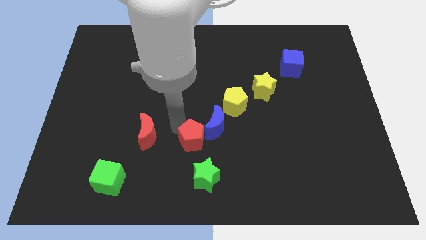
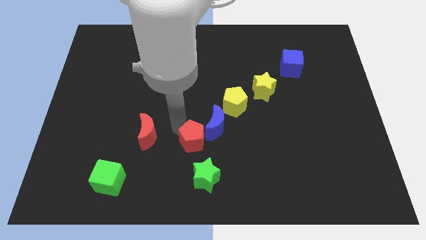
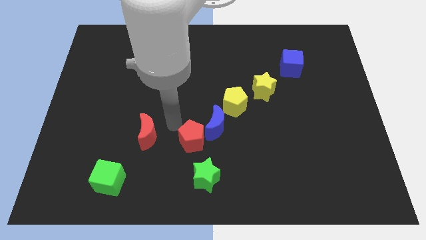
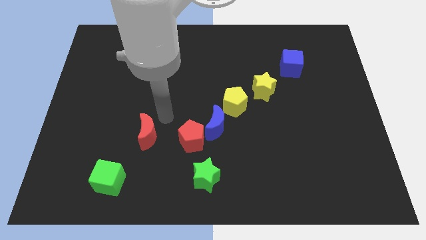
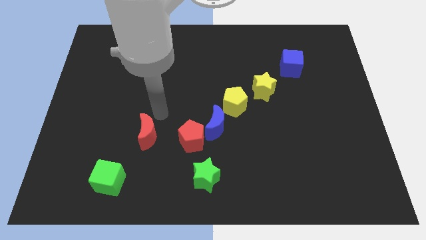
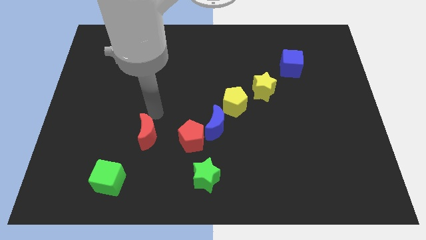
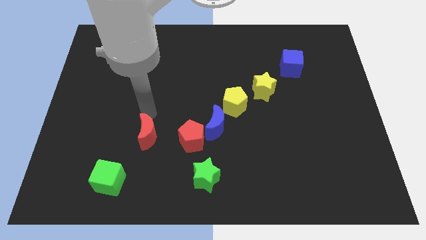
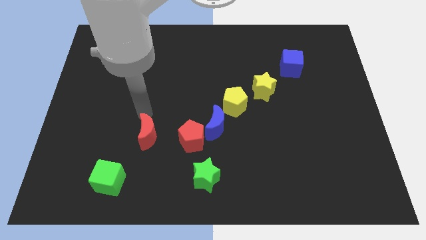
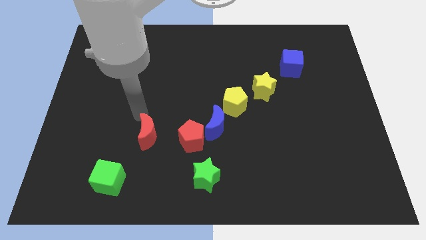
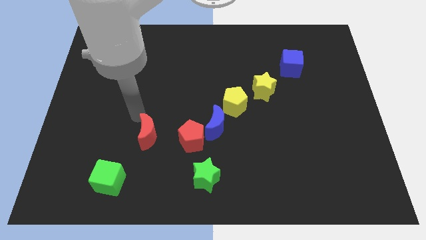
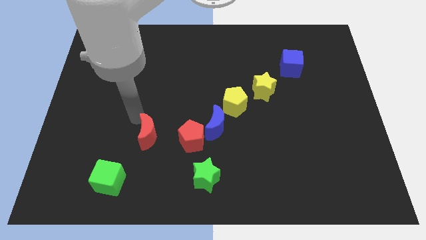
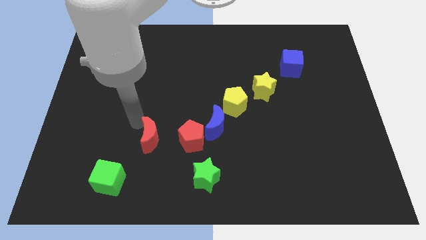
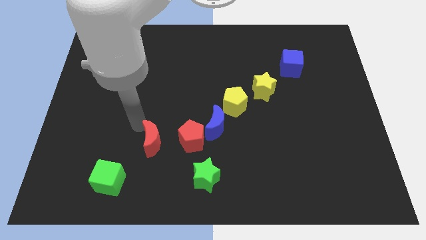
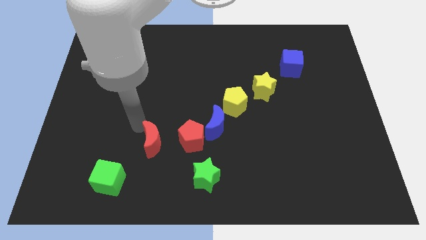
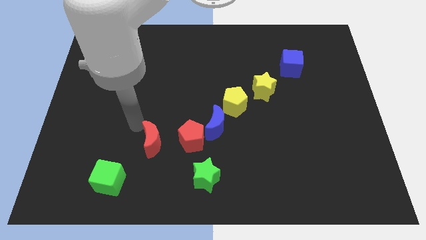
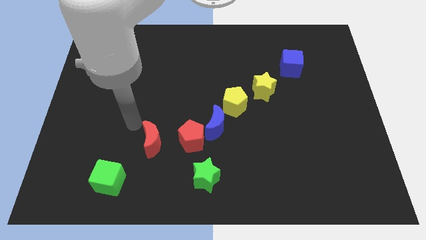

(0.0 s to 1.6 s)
place red moon parallel left to red pentagon

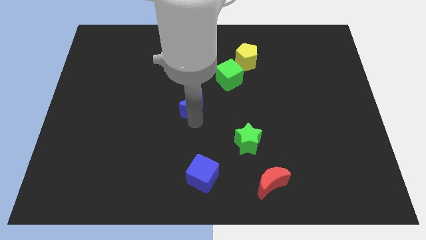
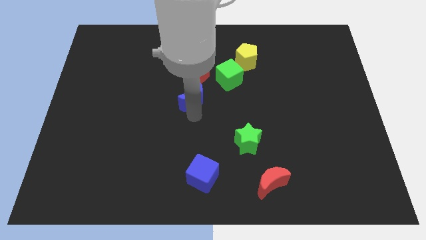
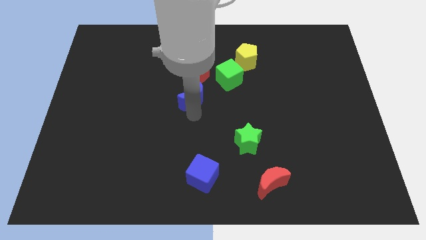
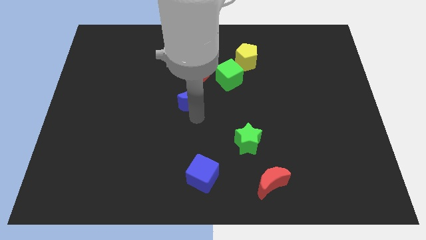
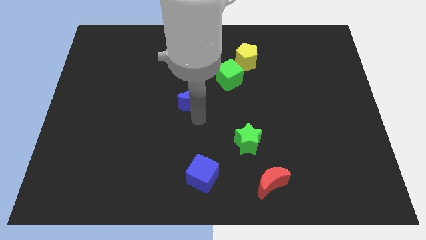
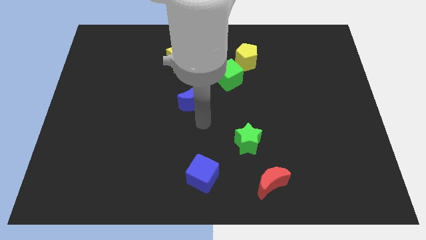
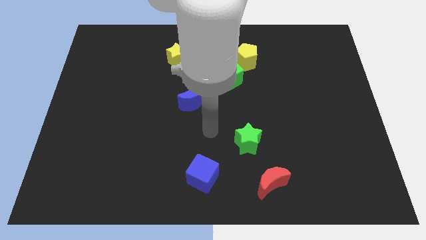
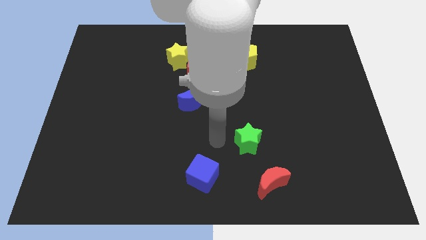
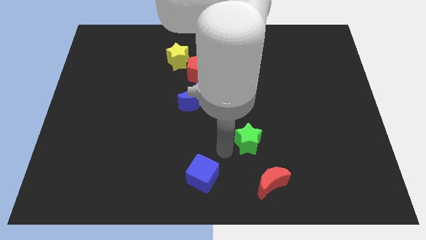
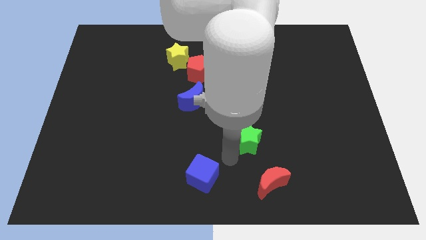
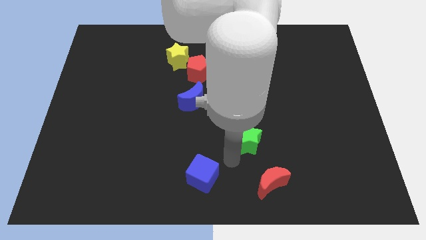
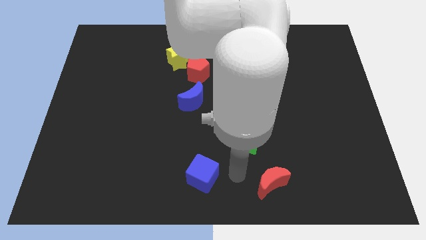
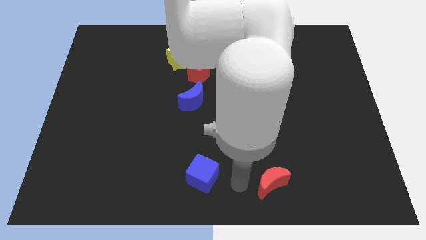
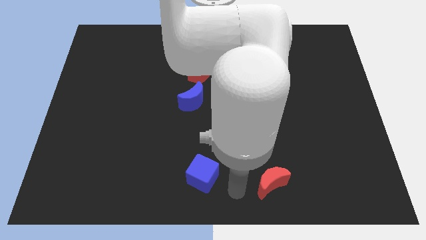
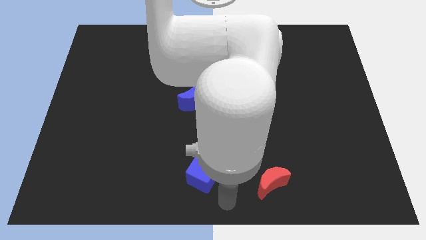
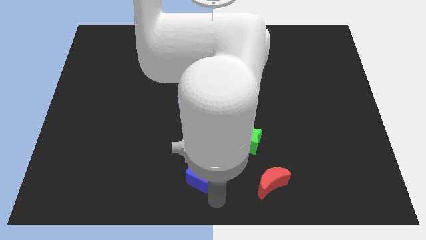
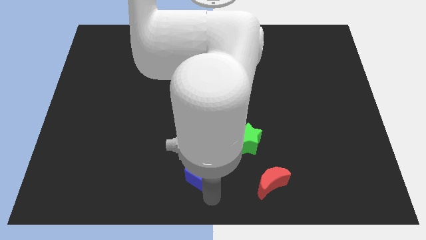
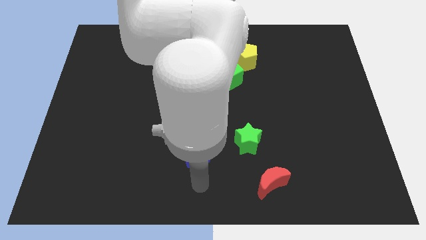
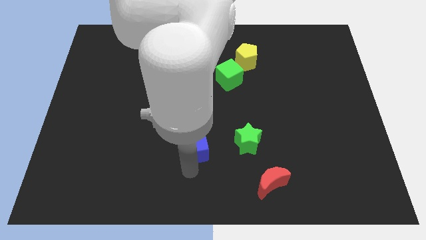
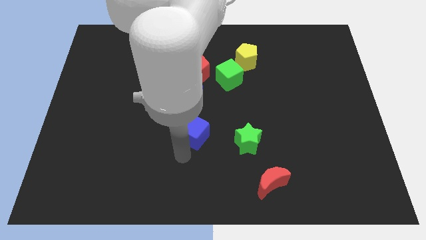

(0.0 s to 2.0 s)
move the blue cube parallel left to the green star

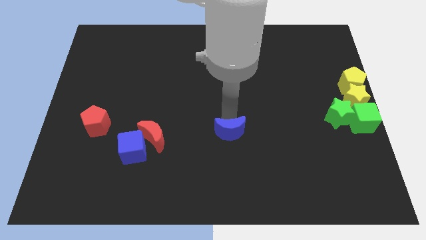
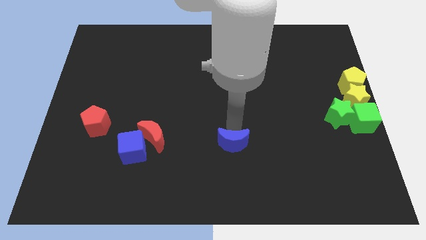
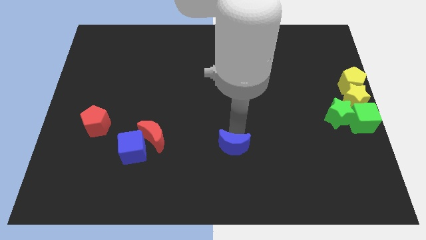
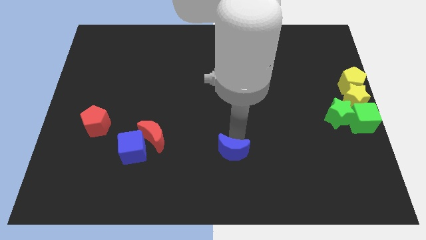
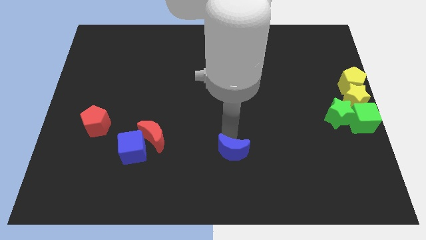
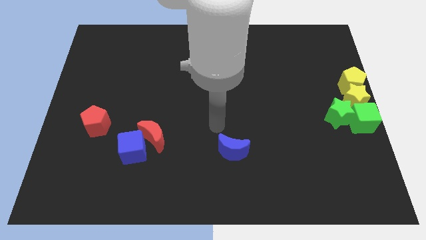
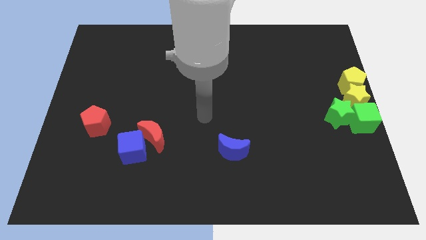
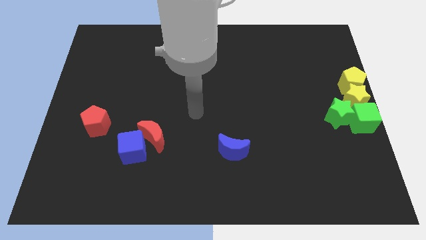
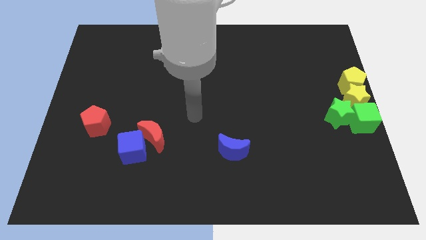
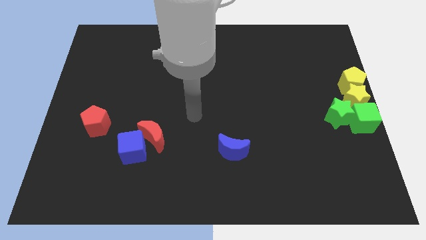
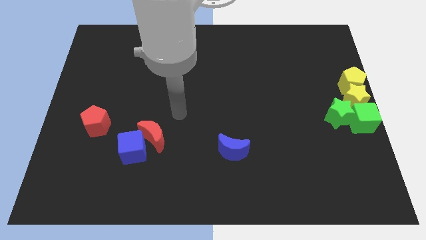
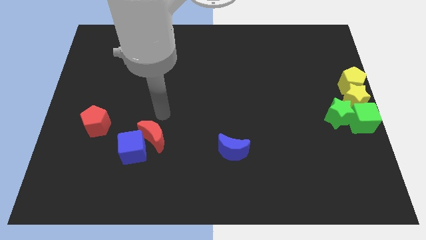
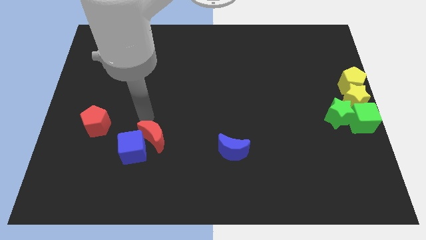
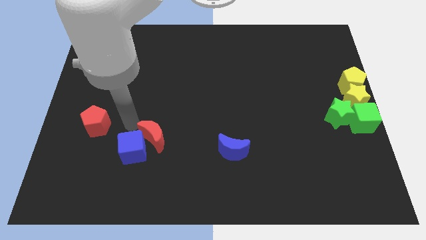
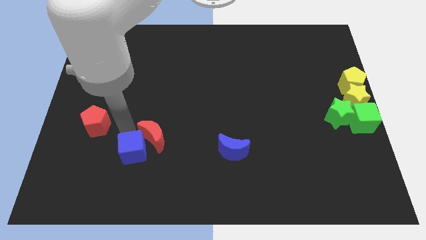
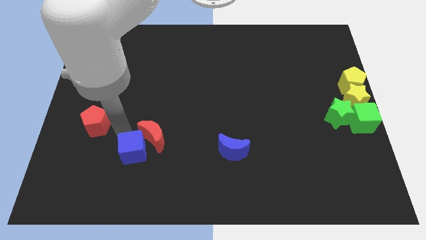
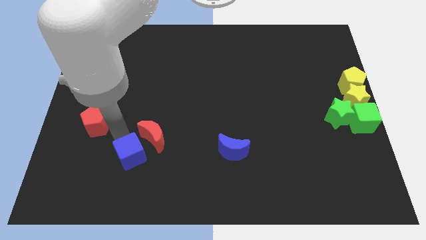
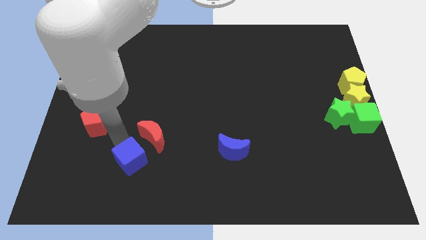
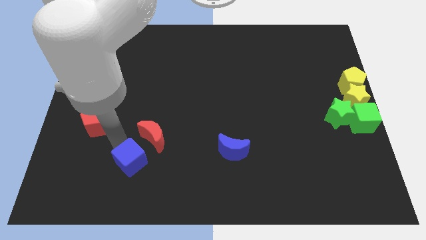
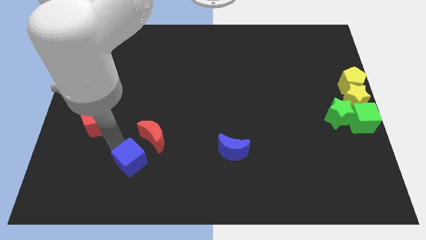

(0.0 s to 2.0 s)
drag the blue cube towards bottom center

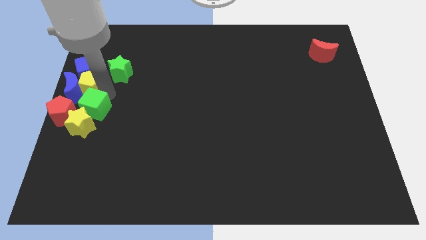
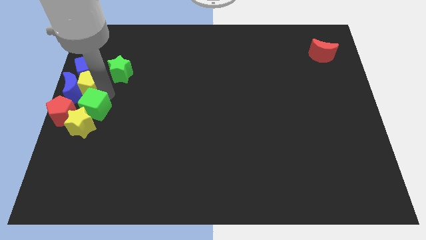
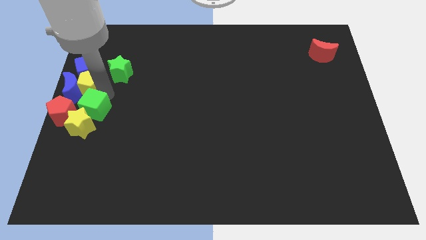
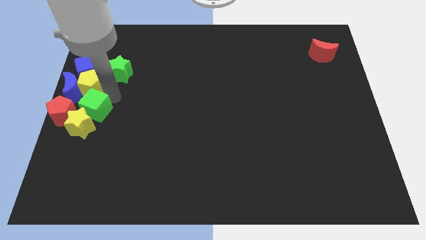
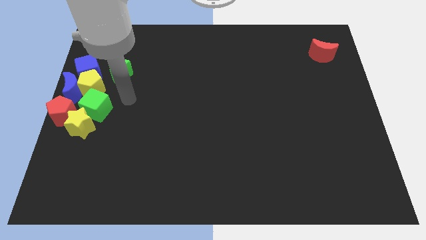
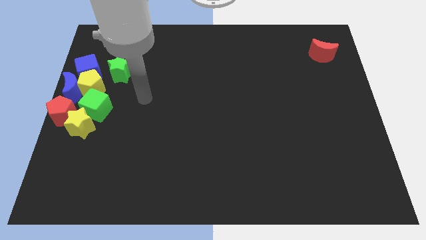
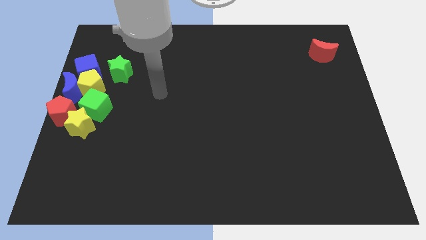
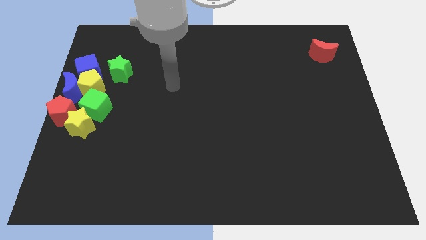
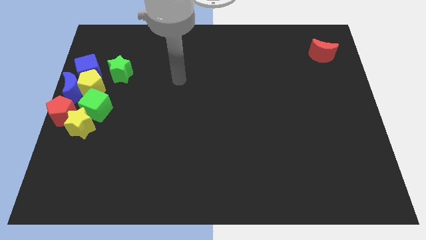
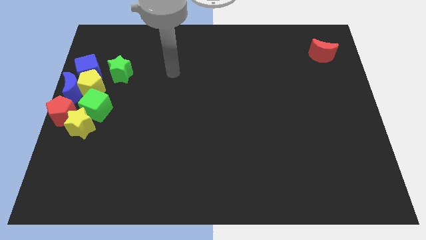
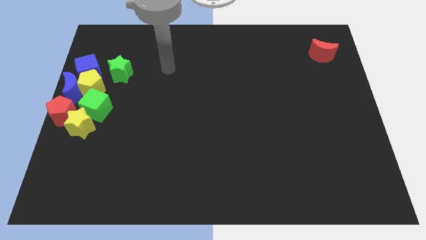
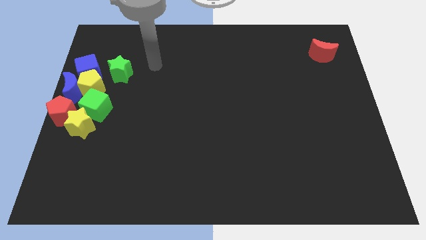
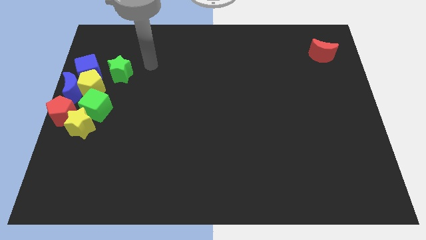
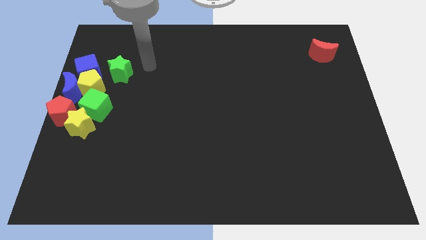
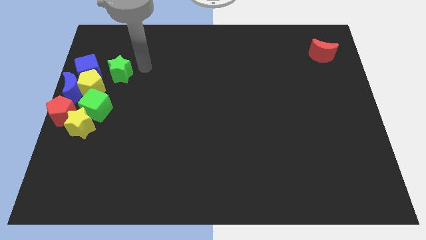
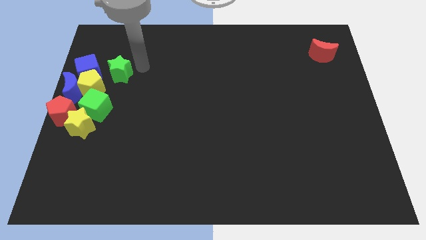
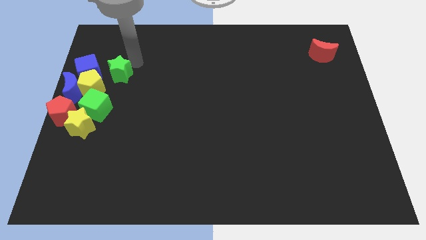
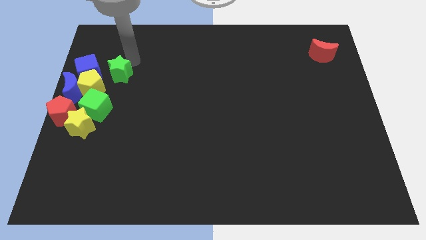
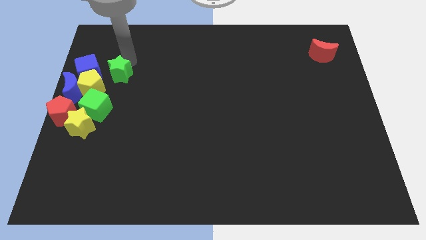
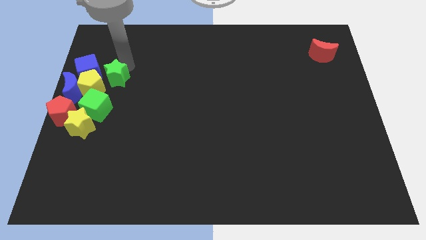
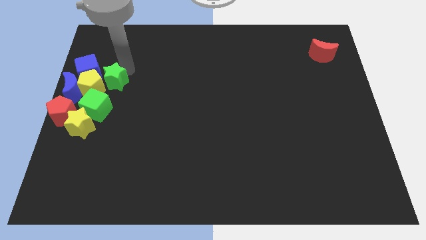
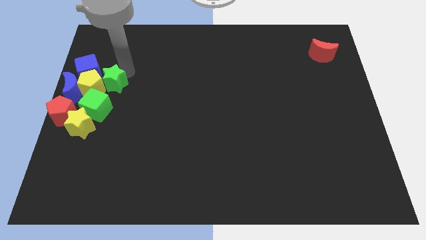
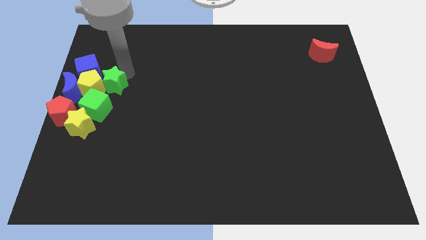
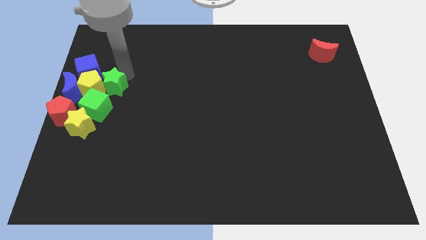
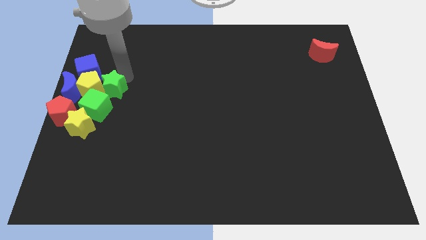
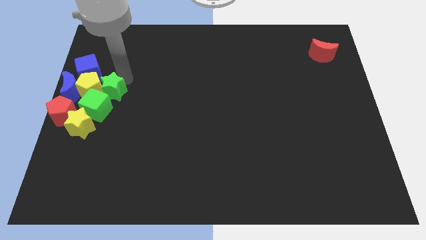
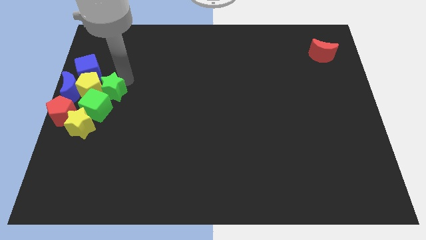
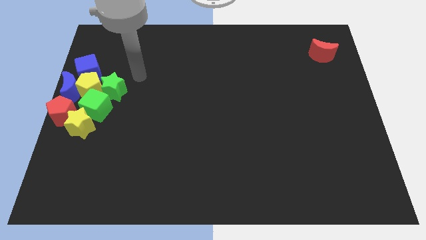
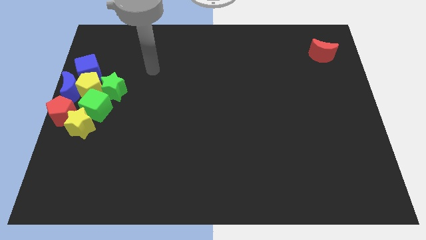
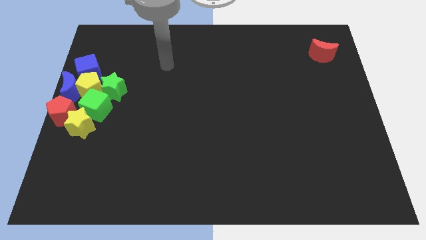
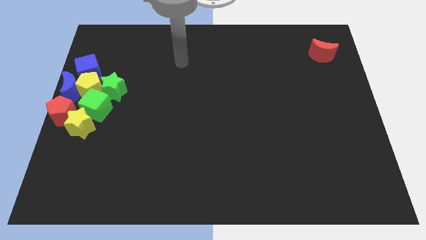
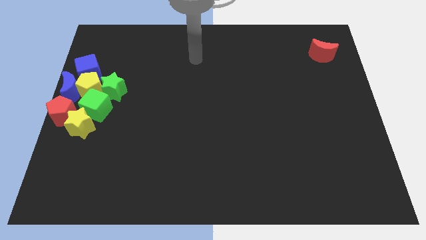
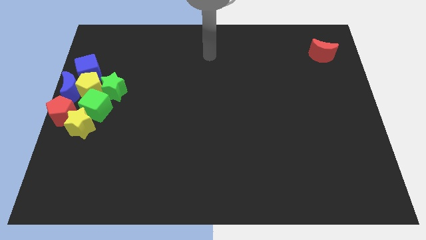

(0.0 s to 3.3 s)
move the green star into the group of blocks

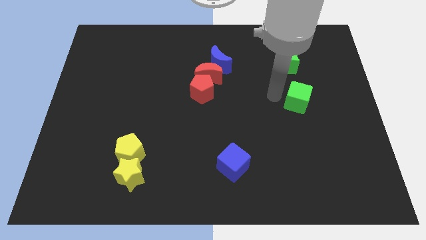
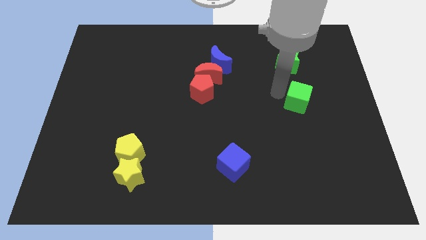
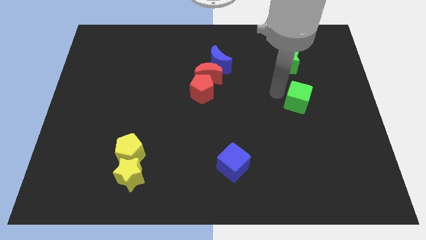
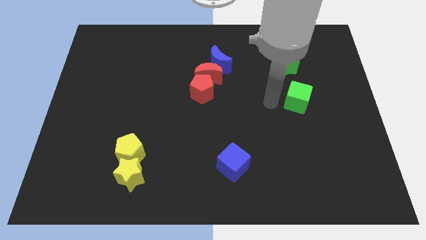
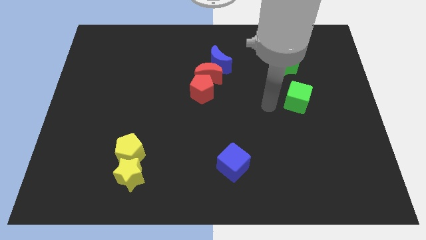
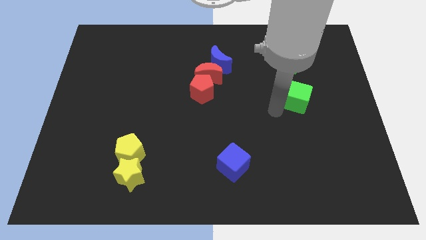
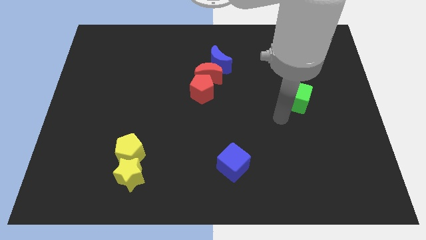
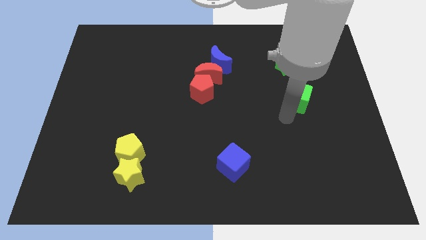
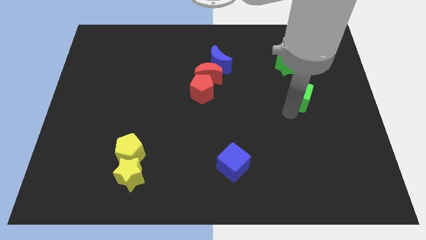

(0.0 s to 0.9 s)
place your arm to the bottom of the green cube
